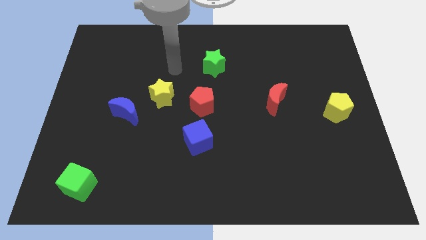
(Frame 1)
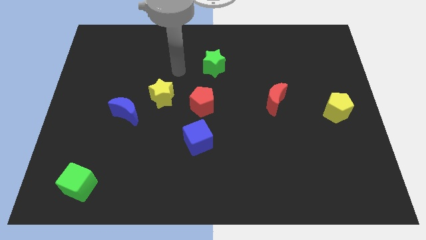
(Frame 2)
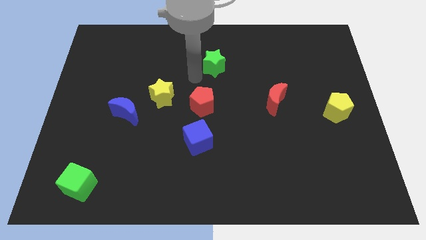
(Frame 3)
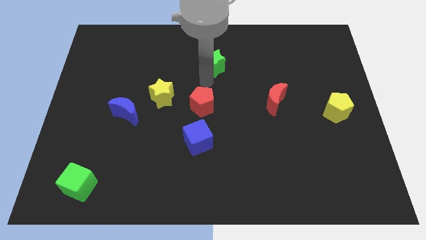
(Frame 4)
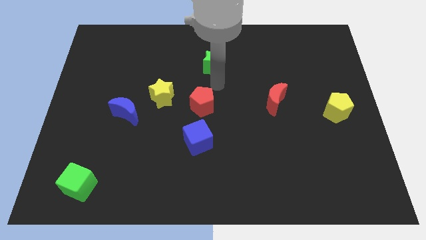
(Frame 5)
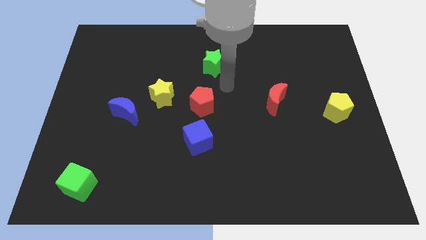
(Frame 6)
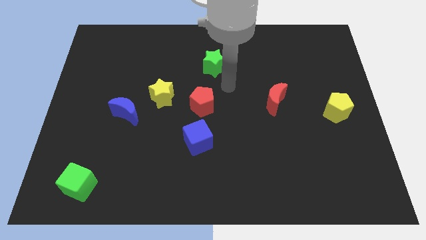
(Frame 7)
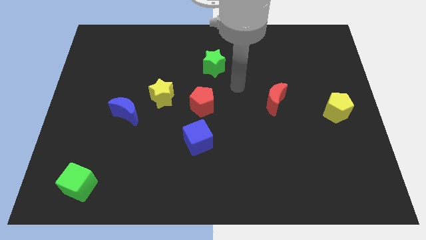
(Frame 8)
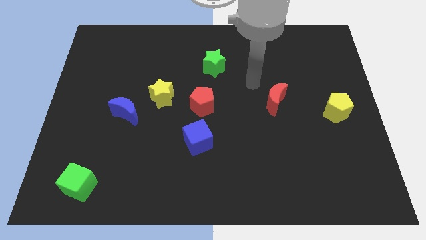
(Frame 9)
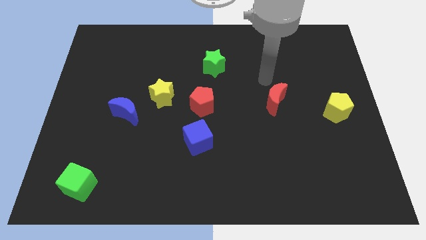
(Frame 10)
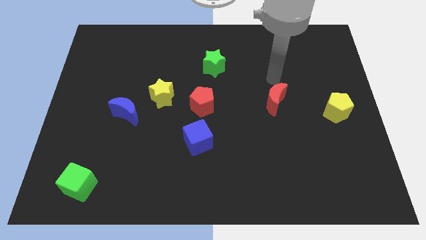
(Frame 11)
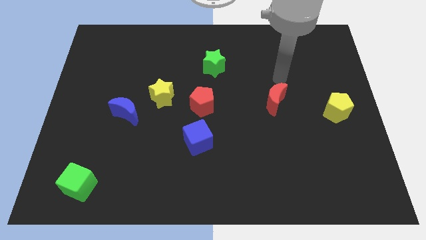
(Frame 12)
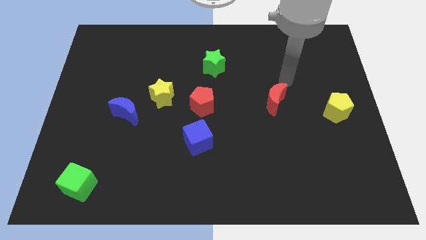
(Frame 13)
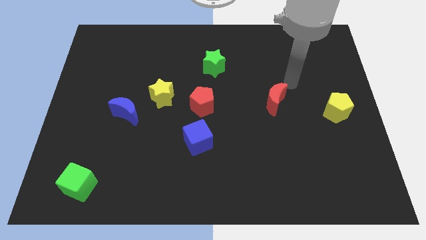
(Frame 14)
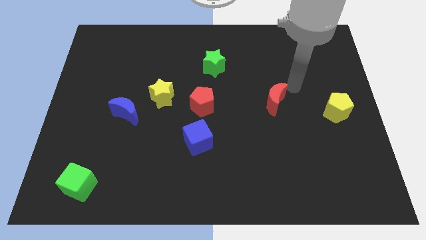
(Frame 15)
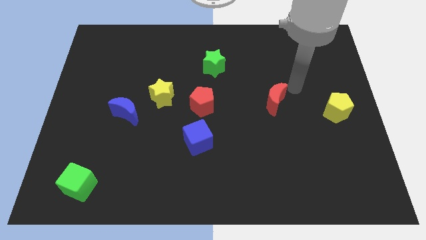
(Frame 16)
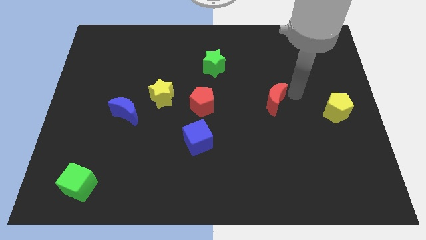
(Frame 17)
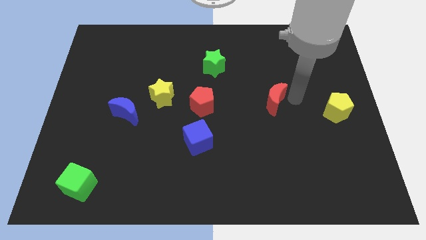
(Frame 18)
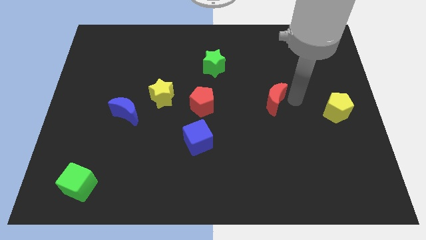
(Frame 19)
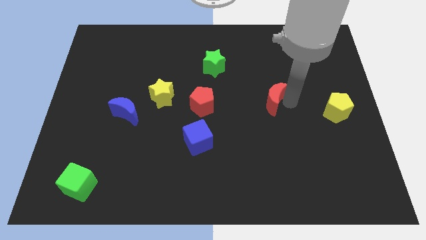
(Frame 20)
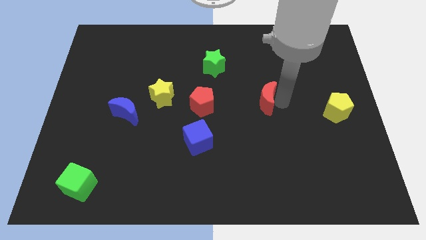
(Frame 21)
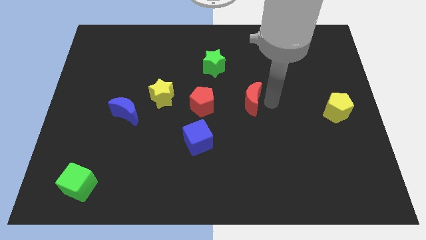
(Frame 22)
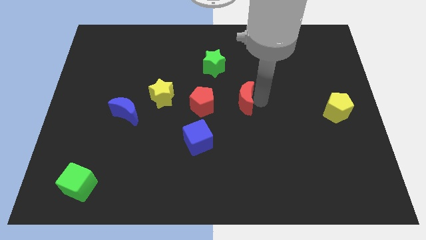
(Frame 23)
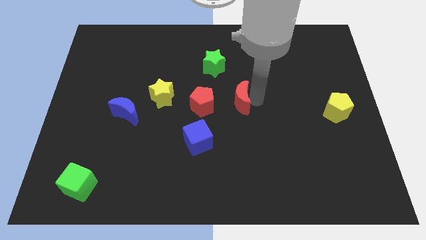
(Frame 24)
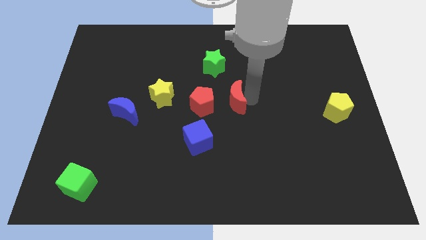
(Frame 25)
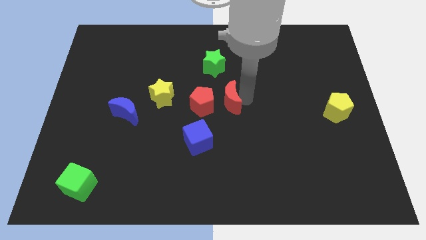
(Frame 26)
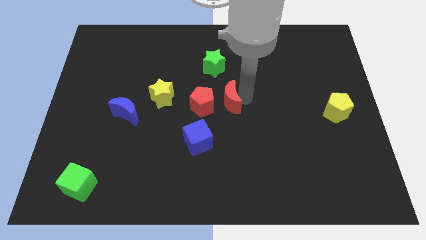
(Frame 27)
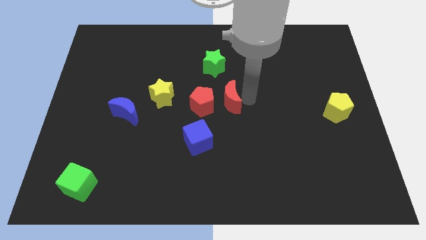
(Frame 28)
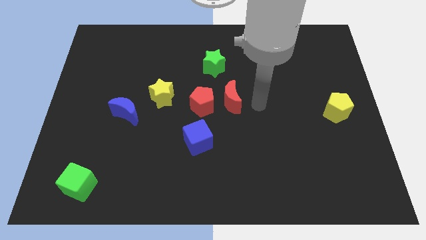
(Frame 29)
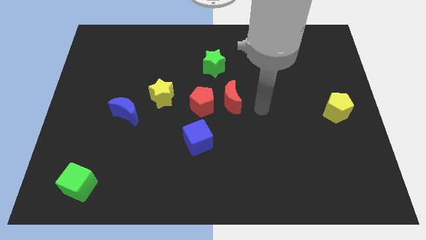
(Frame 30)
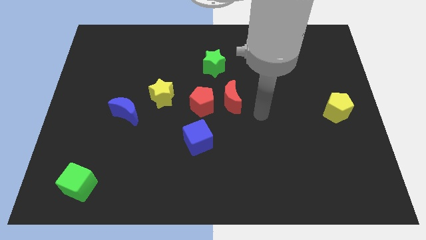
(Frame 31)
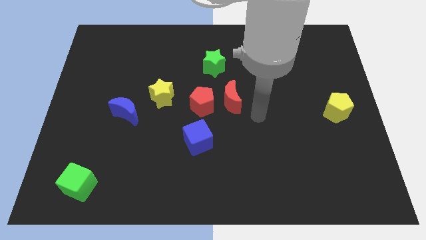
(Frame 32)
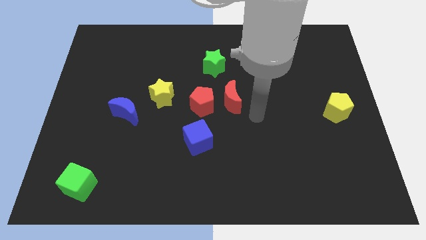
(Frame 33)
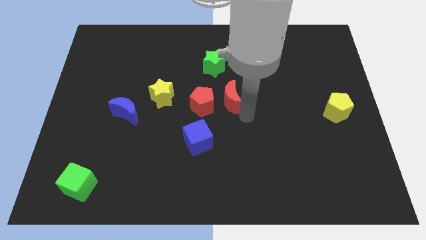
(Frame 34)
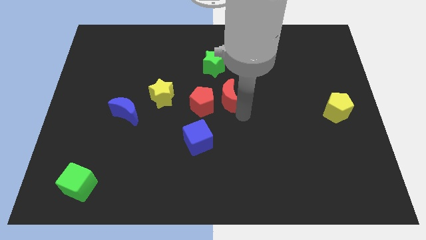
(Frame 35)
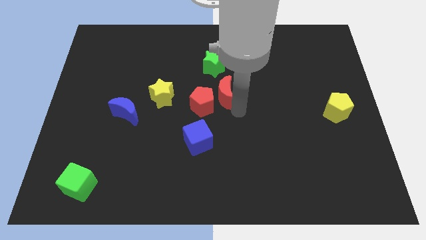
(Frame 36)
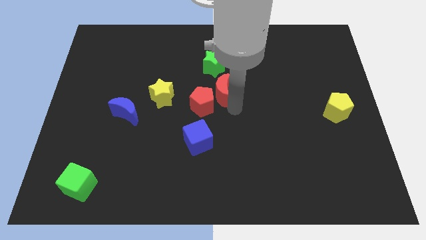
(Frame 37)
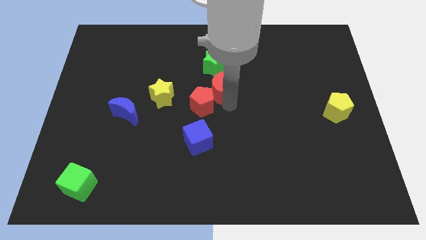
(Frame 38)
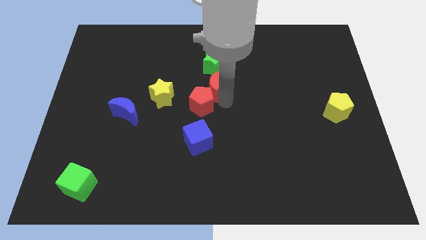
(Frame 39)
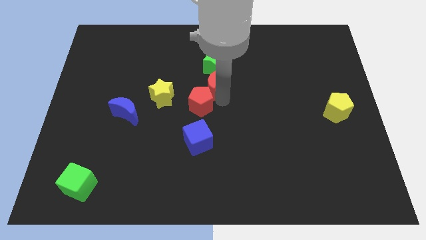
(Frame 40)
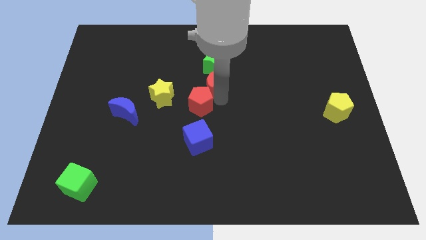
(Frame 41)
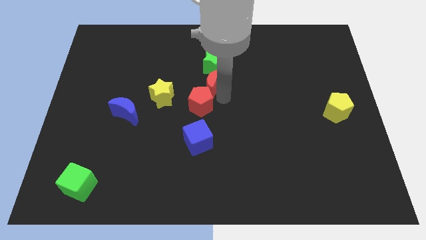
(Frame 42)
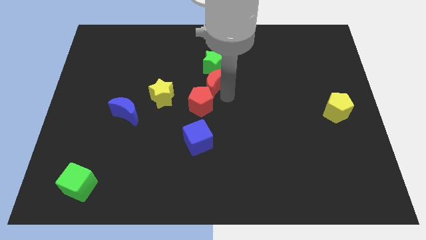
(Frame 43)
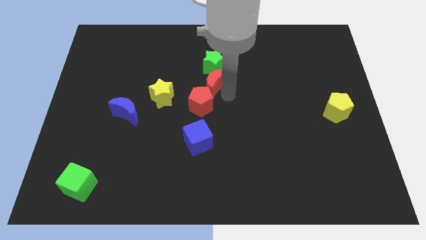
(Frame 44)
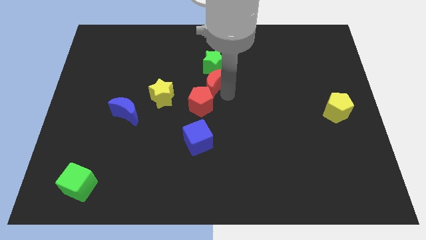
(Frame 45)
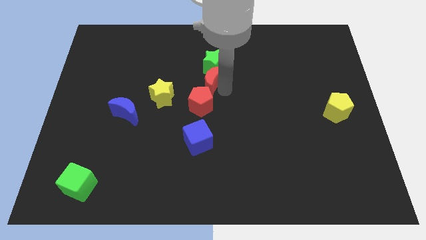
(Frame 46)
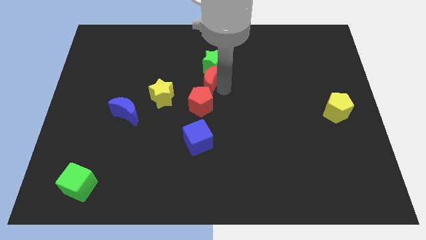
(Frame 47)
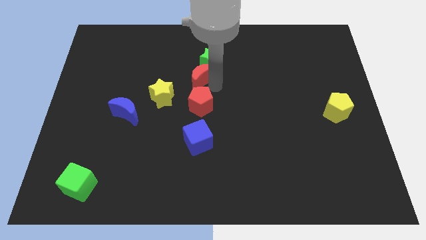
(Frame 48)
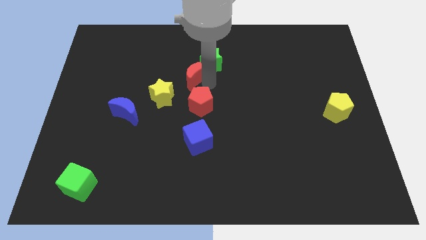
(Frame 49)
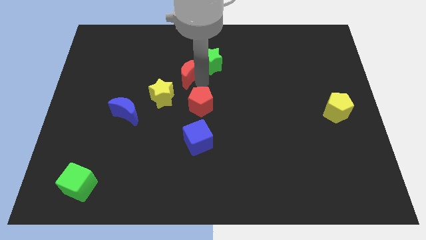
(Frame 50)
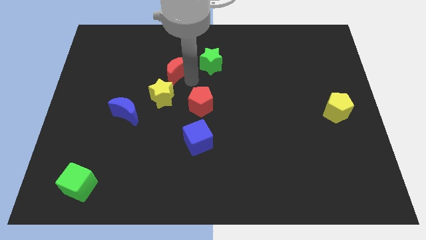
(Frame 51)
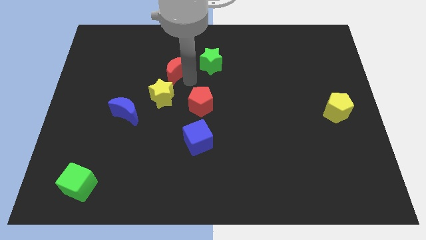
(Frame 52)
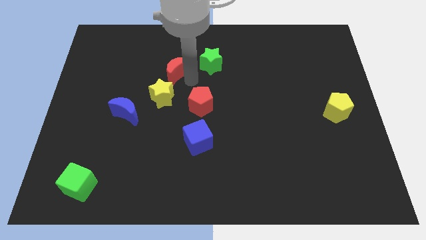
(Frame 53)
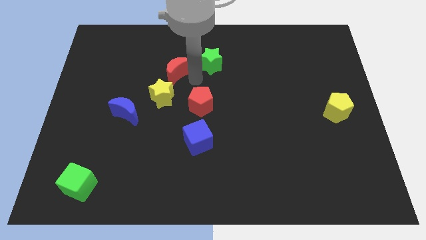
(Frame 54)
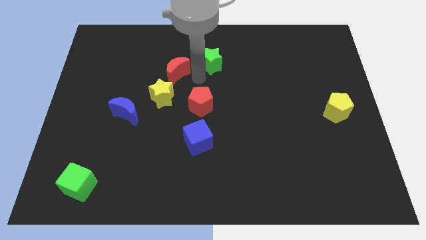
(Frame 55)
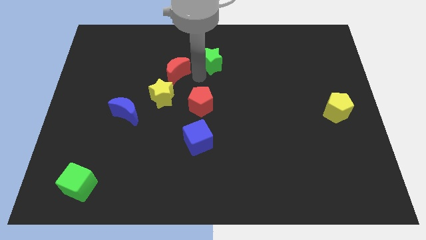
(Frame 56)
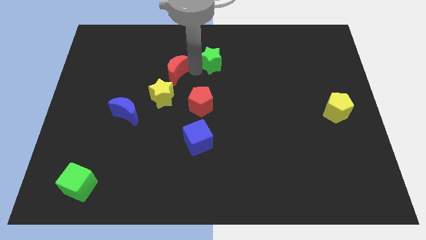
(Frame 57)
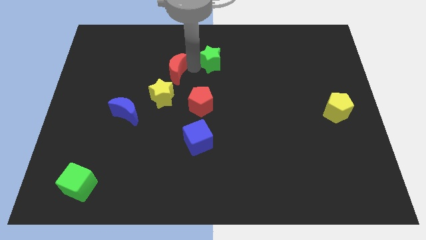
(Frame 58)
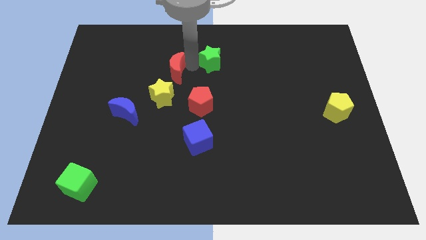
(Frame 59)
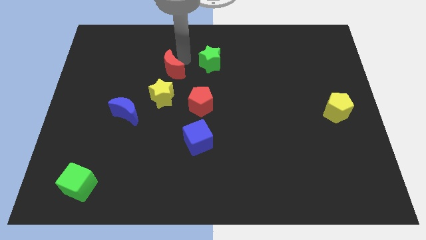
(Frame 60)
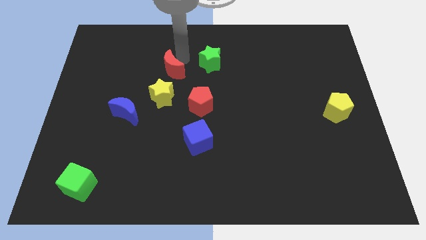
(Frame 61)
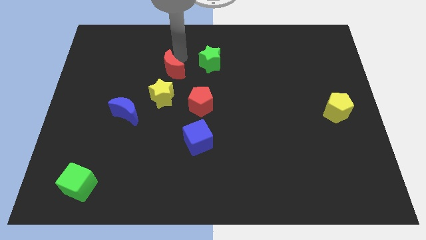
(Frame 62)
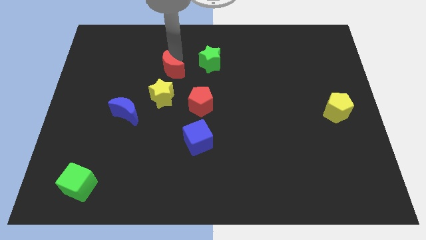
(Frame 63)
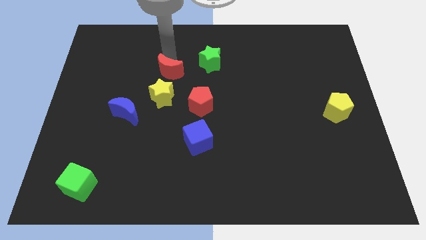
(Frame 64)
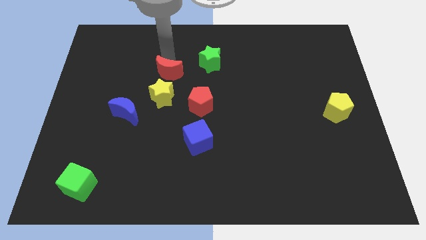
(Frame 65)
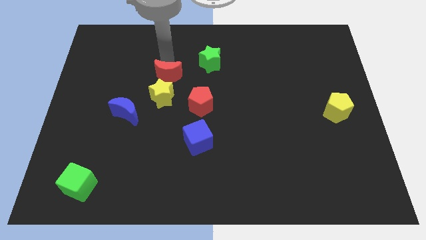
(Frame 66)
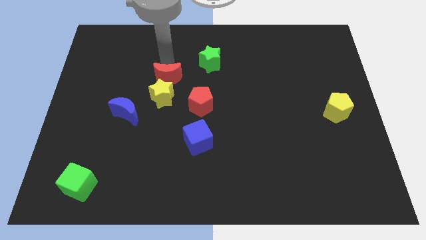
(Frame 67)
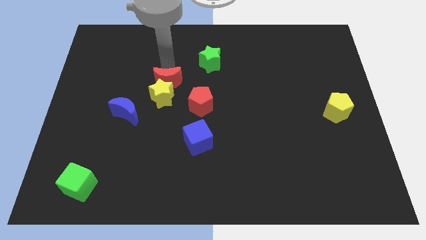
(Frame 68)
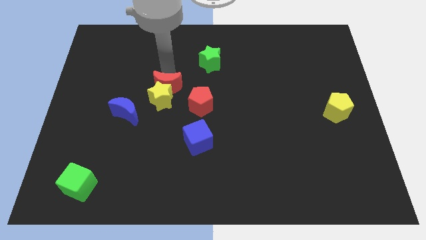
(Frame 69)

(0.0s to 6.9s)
put the red moon close to the yellow star

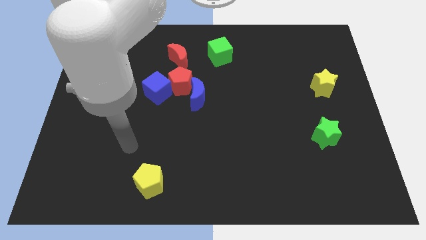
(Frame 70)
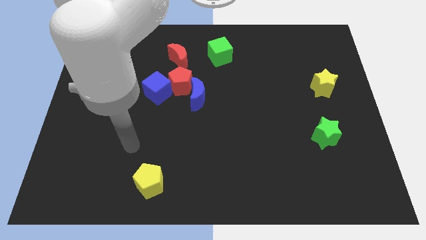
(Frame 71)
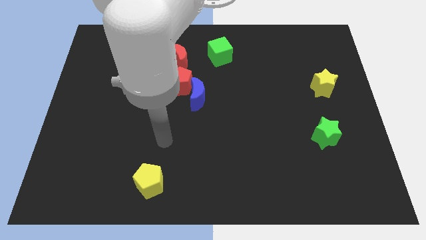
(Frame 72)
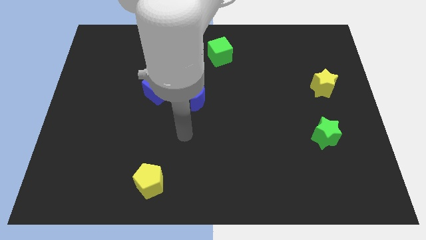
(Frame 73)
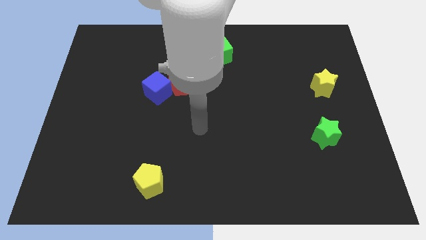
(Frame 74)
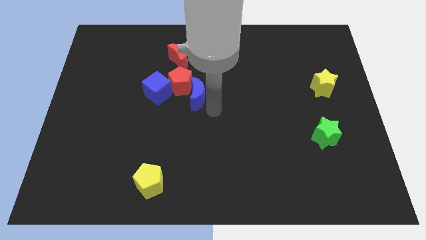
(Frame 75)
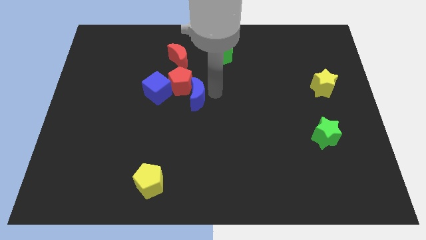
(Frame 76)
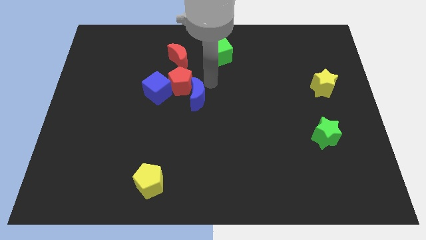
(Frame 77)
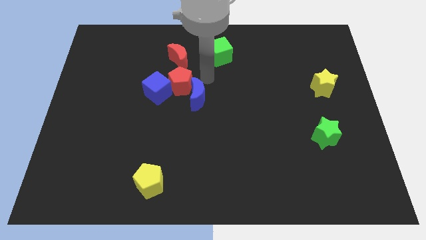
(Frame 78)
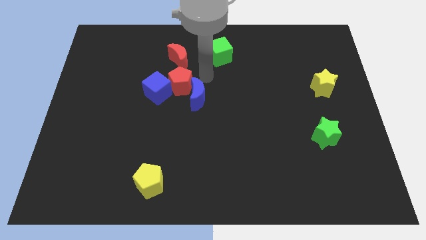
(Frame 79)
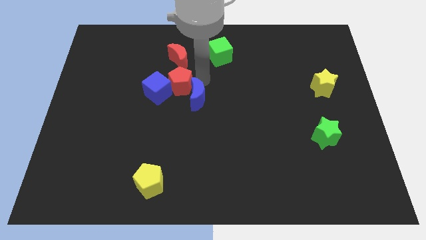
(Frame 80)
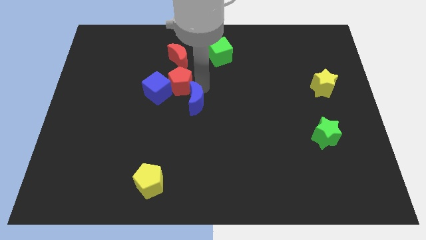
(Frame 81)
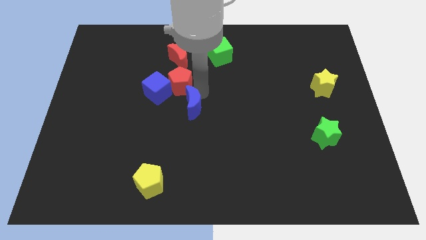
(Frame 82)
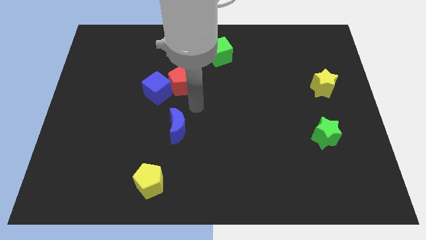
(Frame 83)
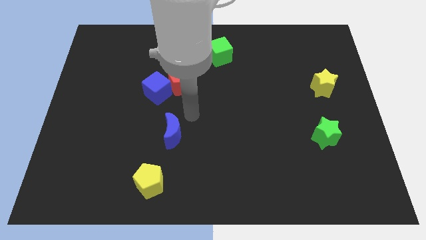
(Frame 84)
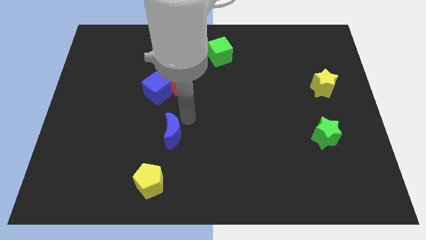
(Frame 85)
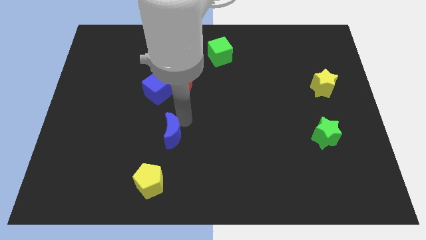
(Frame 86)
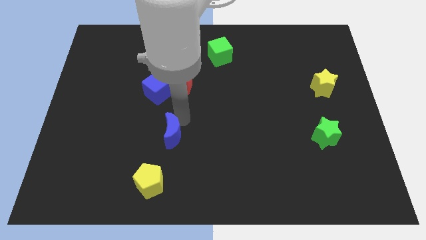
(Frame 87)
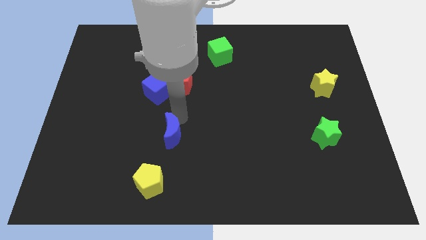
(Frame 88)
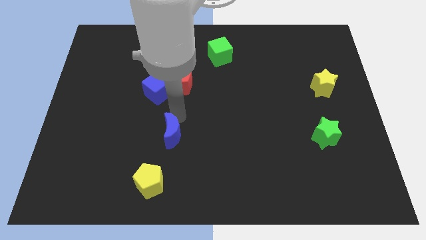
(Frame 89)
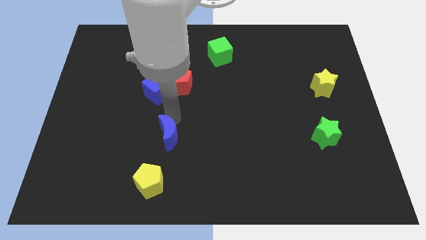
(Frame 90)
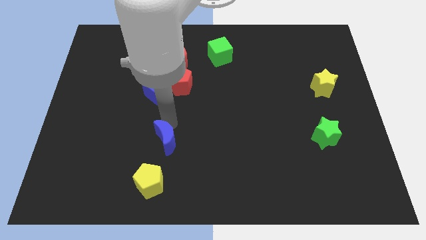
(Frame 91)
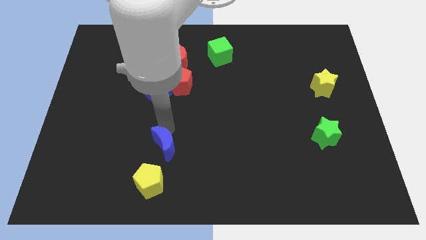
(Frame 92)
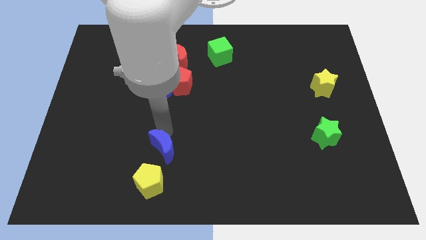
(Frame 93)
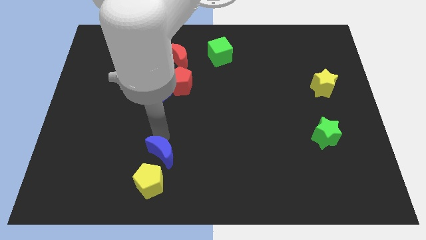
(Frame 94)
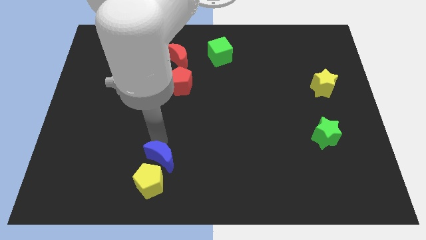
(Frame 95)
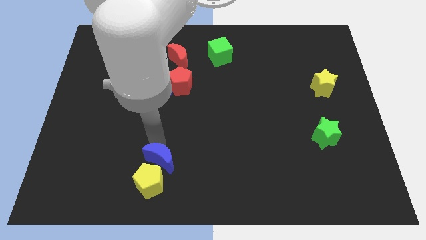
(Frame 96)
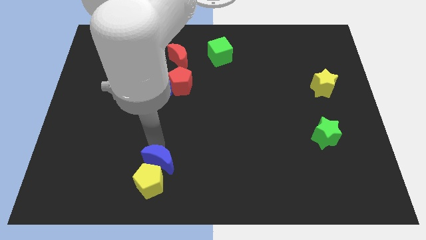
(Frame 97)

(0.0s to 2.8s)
slide the blue moon next to the yellow pentagon
